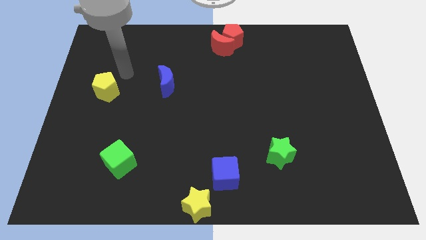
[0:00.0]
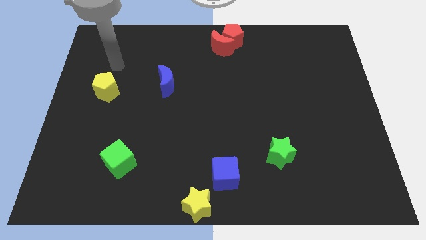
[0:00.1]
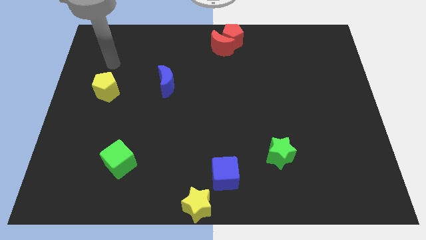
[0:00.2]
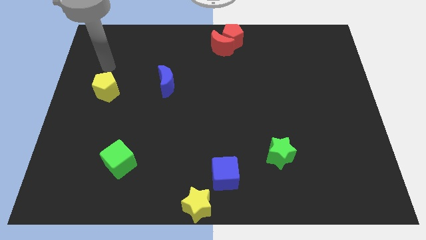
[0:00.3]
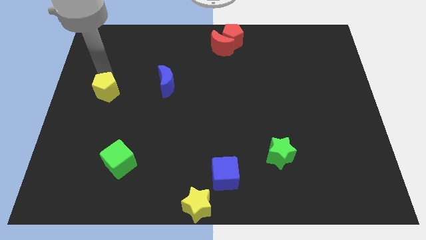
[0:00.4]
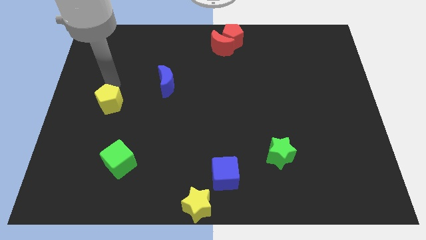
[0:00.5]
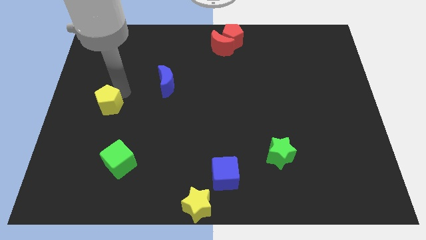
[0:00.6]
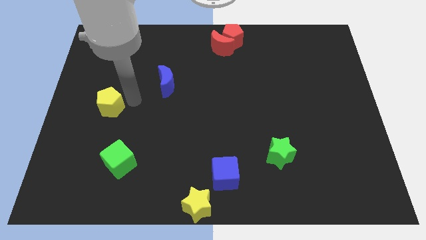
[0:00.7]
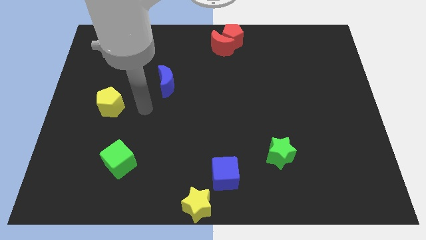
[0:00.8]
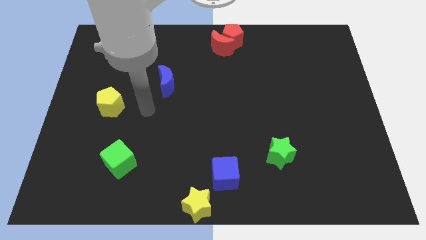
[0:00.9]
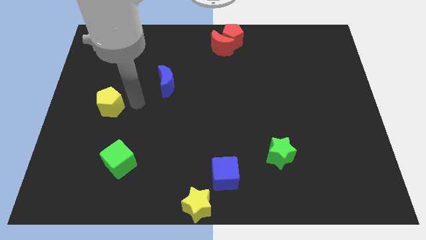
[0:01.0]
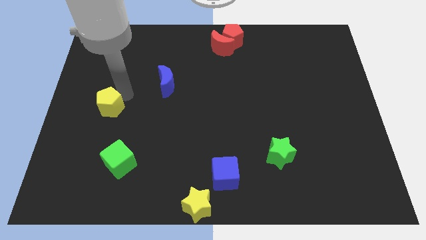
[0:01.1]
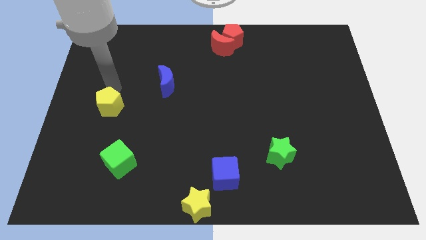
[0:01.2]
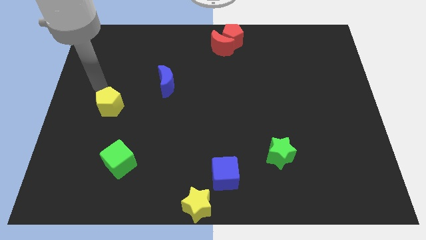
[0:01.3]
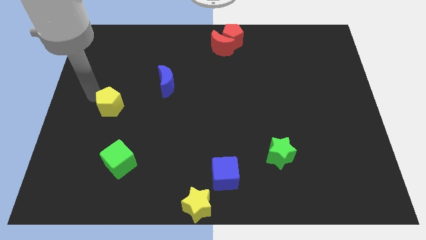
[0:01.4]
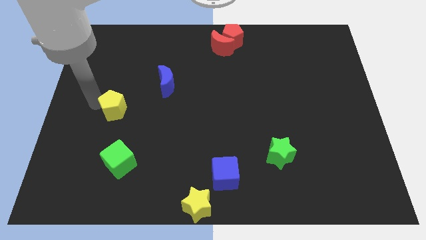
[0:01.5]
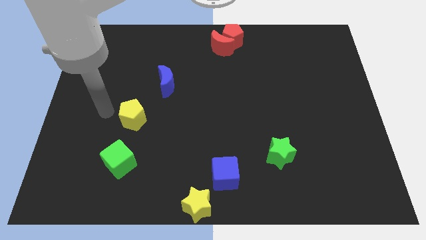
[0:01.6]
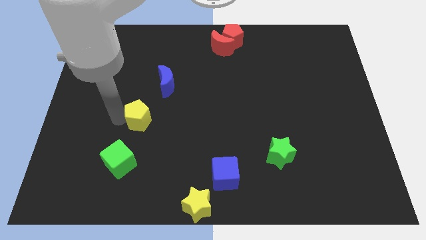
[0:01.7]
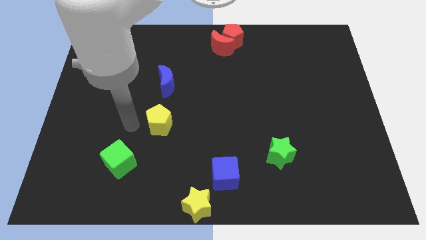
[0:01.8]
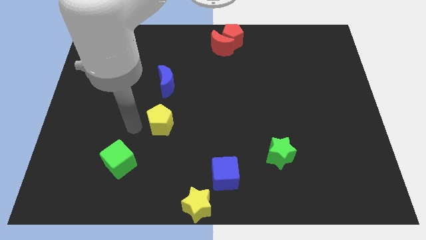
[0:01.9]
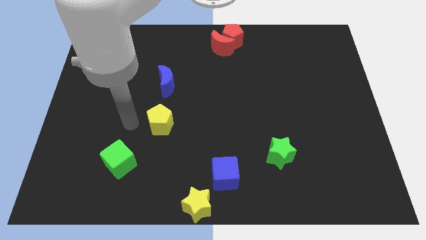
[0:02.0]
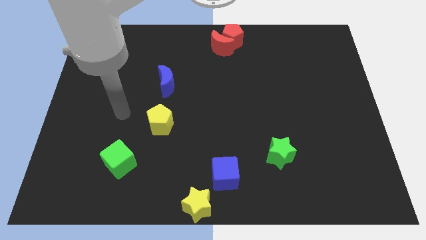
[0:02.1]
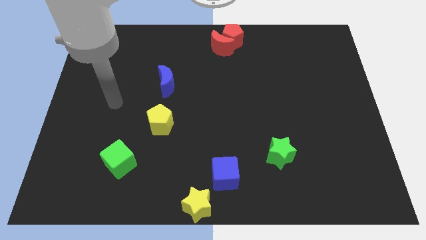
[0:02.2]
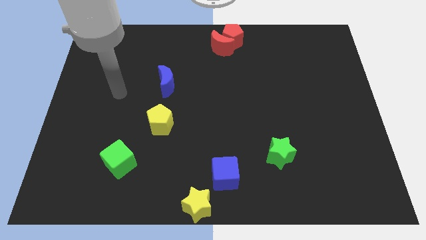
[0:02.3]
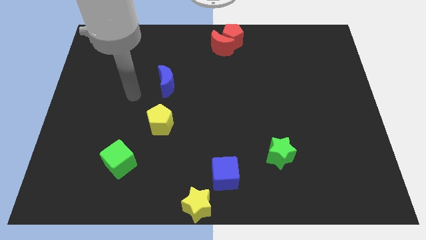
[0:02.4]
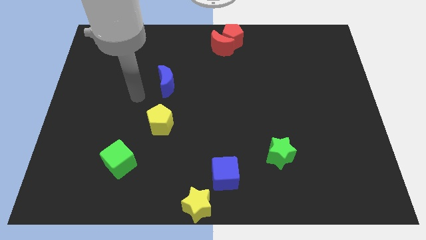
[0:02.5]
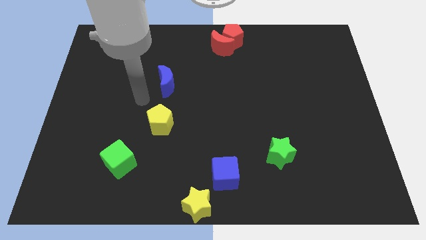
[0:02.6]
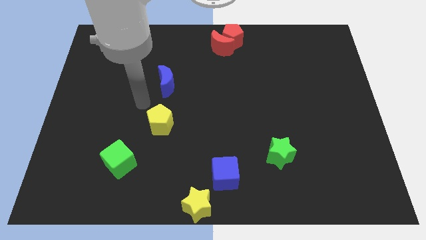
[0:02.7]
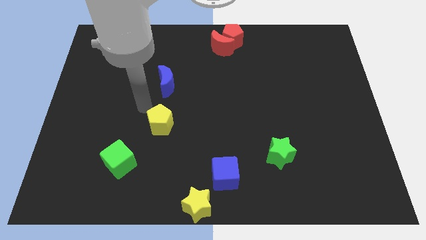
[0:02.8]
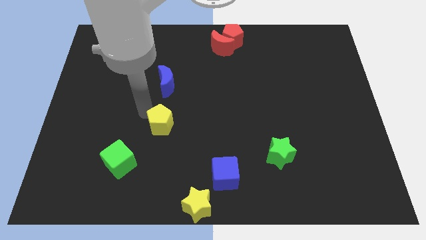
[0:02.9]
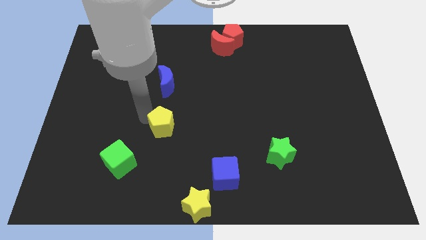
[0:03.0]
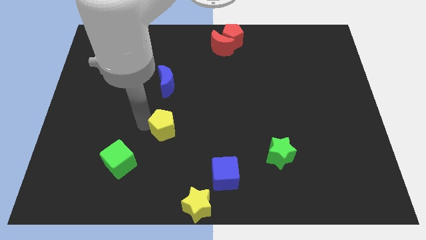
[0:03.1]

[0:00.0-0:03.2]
place the yellow pentagon below blue crescent

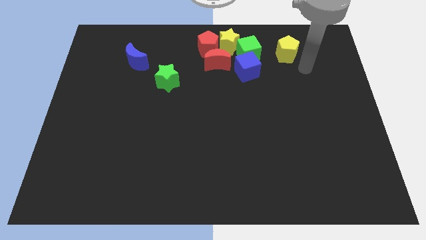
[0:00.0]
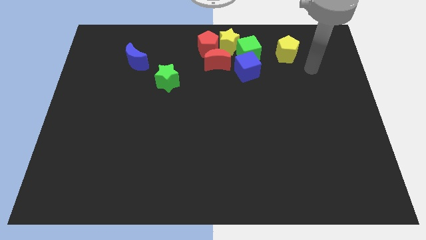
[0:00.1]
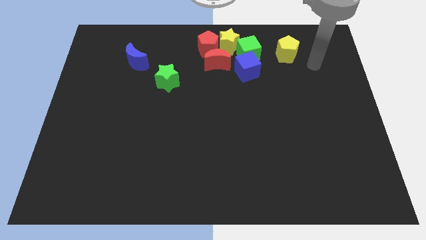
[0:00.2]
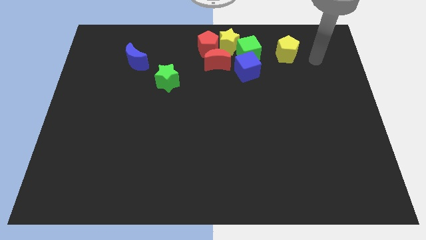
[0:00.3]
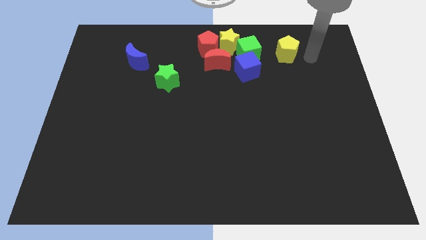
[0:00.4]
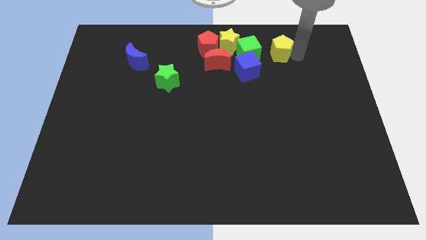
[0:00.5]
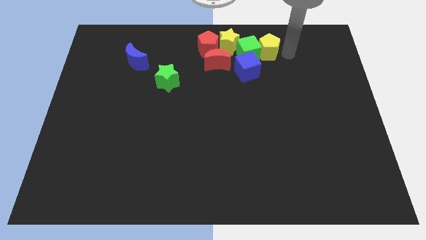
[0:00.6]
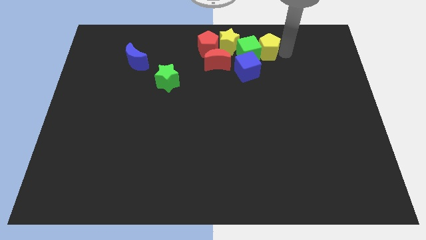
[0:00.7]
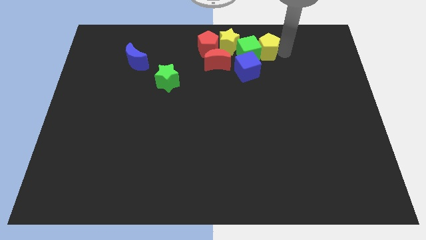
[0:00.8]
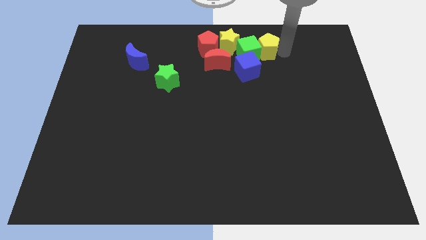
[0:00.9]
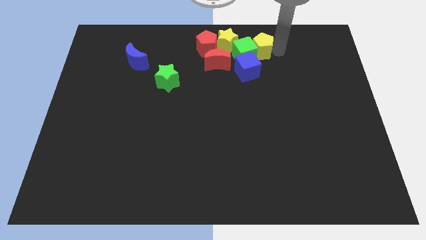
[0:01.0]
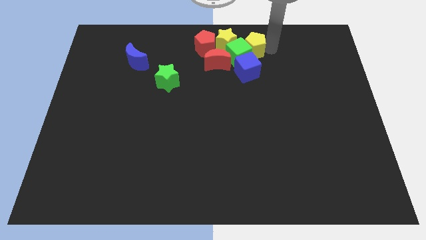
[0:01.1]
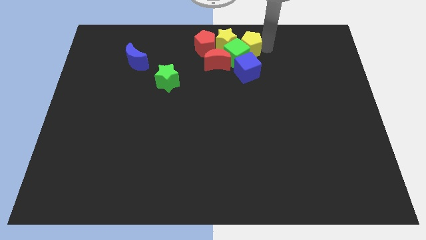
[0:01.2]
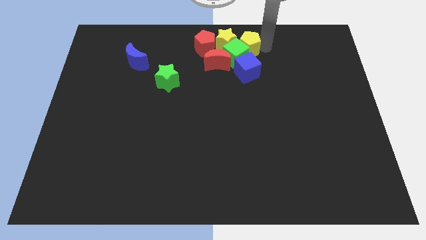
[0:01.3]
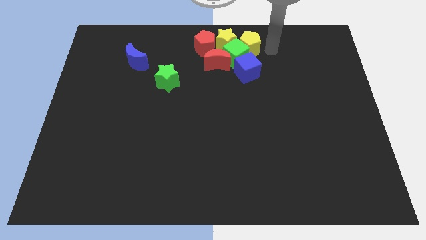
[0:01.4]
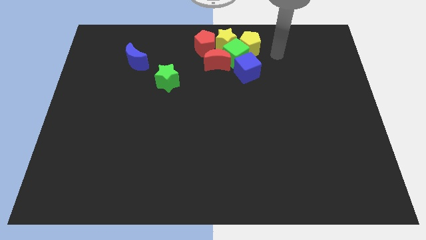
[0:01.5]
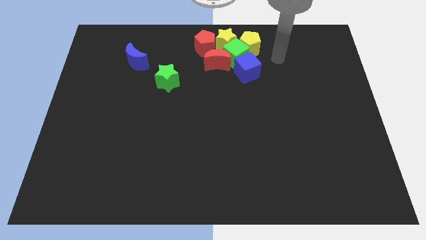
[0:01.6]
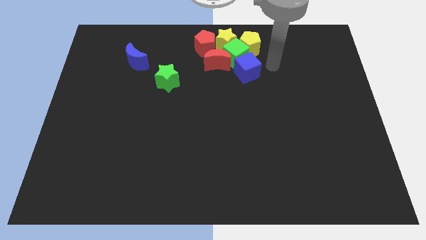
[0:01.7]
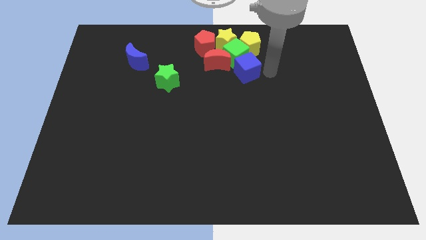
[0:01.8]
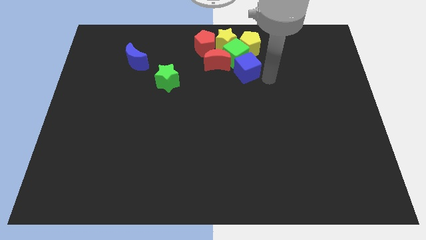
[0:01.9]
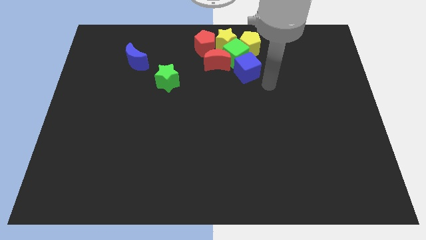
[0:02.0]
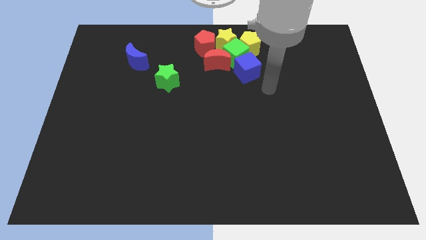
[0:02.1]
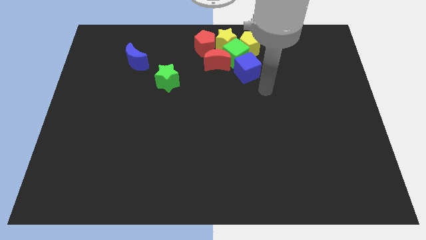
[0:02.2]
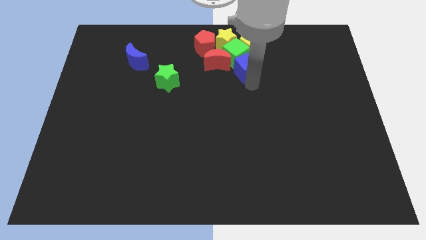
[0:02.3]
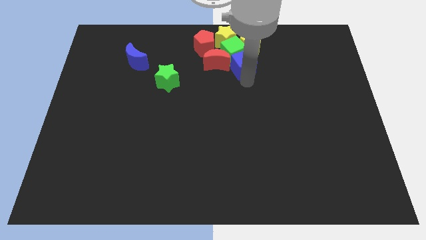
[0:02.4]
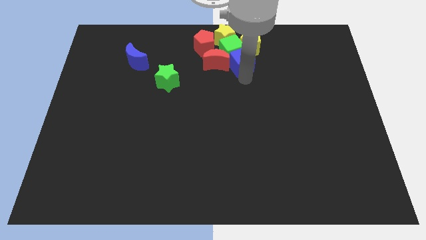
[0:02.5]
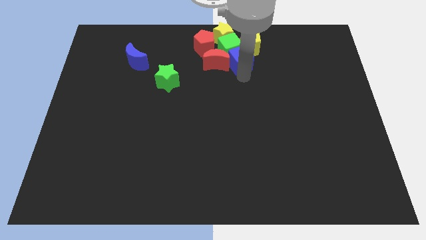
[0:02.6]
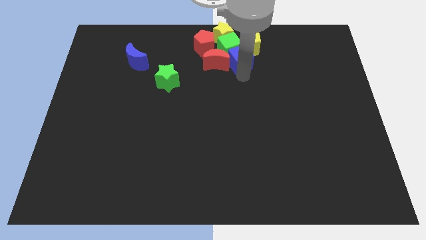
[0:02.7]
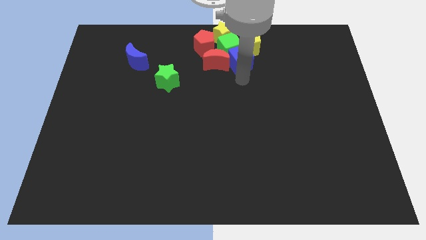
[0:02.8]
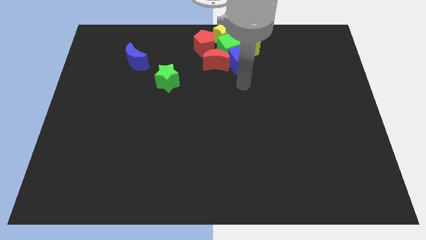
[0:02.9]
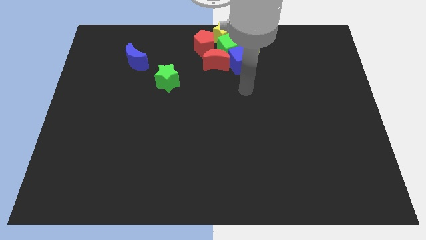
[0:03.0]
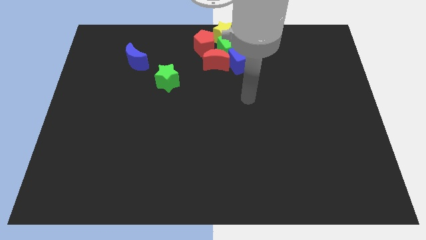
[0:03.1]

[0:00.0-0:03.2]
adjust the group of blocks at the top center of the board

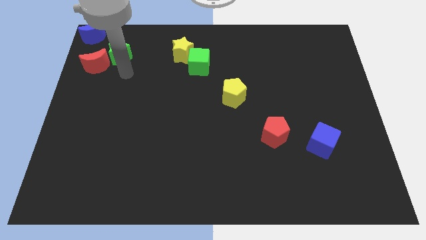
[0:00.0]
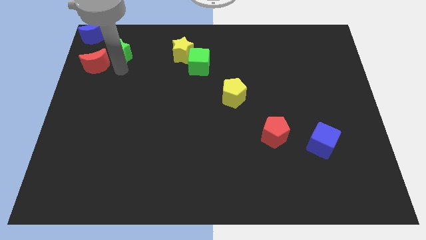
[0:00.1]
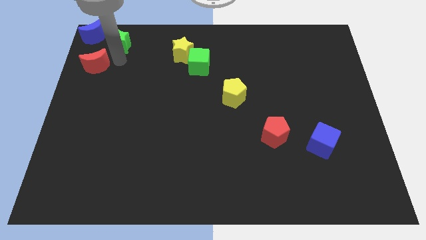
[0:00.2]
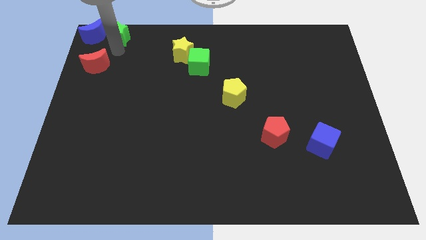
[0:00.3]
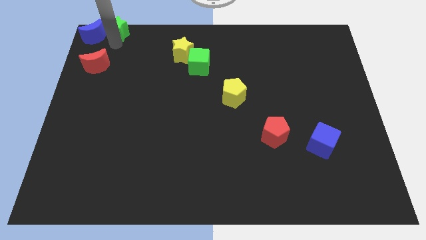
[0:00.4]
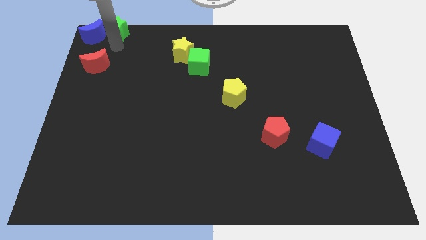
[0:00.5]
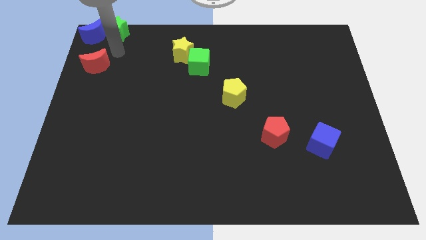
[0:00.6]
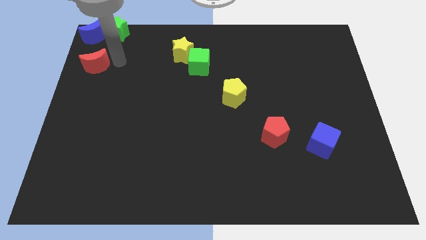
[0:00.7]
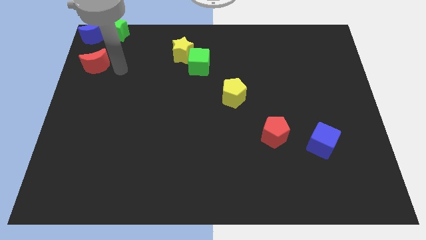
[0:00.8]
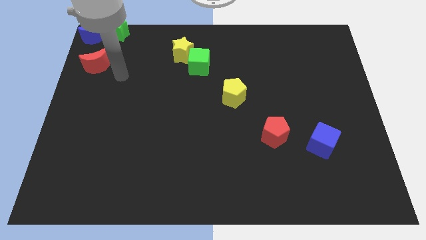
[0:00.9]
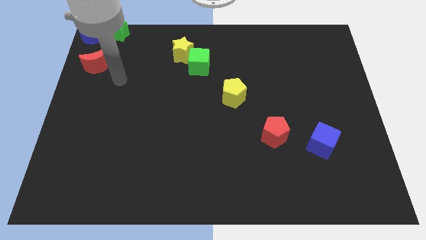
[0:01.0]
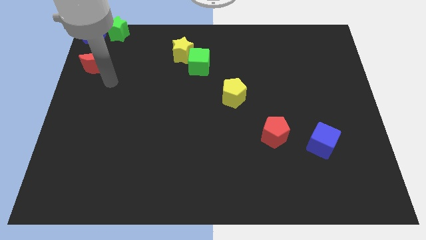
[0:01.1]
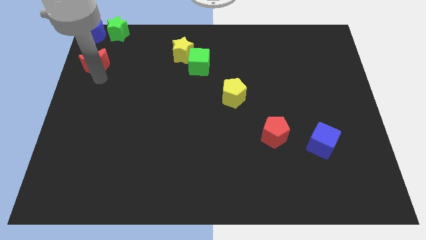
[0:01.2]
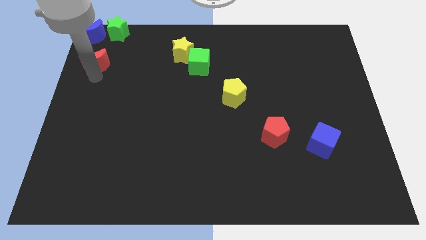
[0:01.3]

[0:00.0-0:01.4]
push the green star to the right of the blue moon

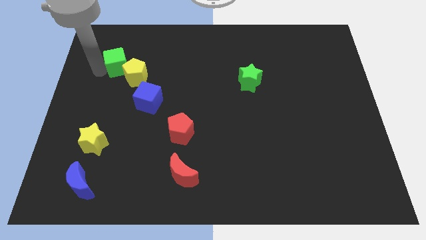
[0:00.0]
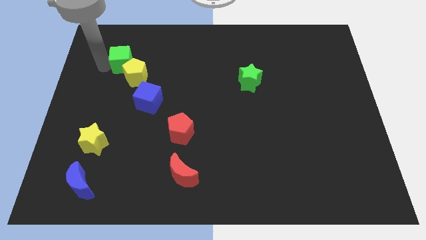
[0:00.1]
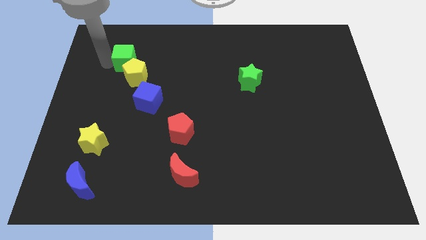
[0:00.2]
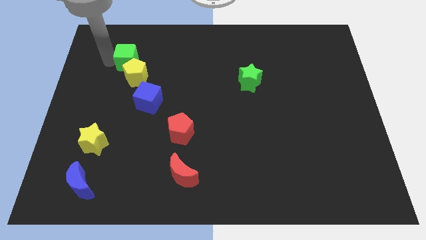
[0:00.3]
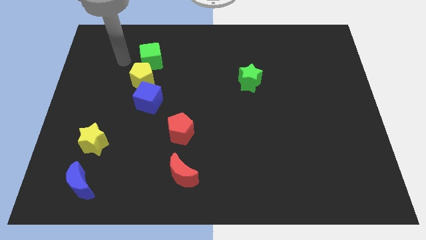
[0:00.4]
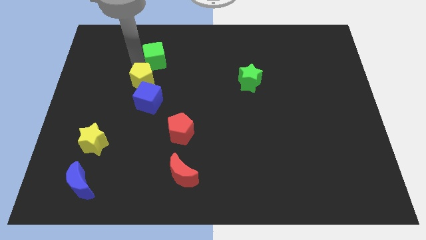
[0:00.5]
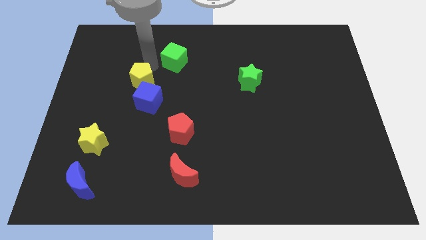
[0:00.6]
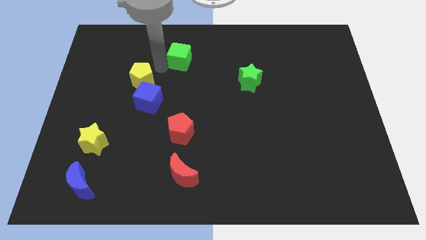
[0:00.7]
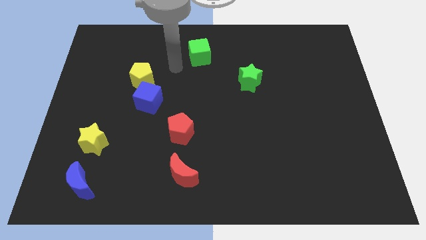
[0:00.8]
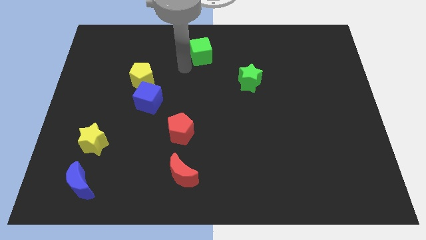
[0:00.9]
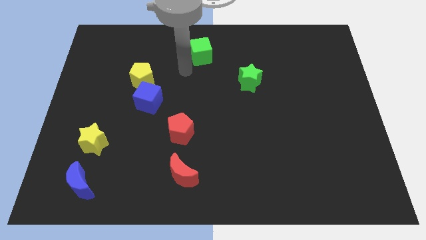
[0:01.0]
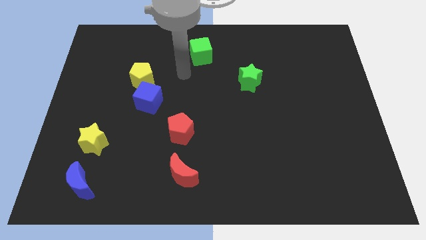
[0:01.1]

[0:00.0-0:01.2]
push the green cube to the top center

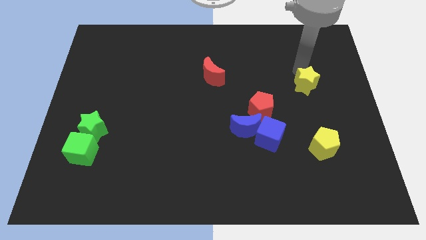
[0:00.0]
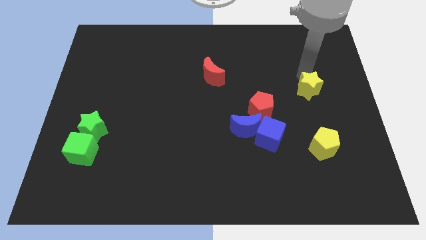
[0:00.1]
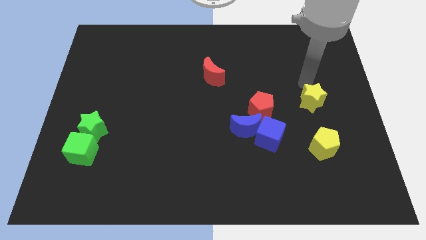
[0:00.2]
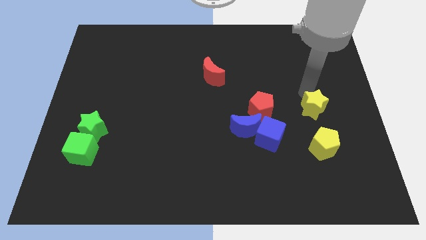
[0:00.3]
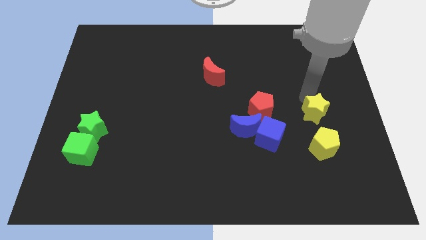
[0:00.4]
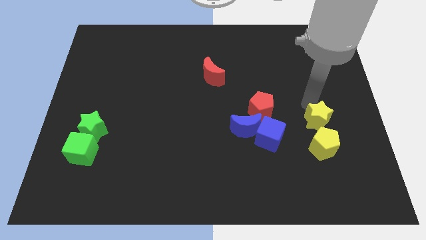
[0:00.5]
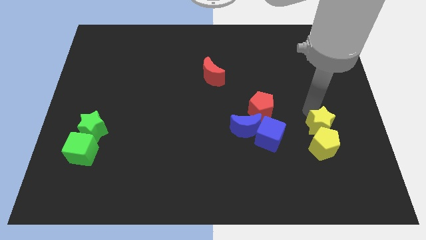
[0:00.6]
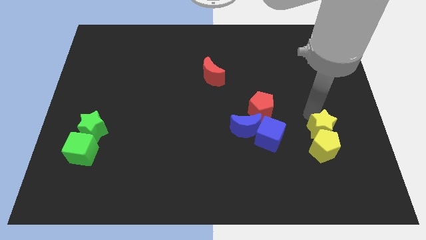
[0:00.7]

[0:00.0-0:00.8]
push the yellow star into the yellow pentagon from the top
